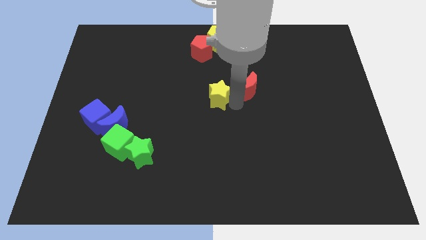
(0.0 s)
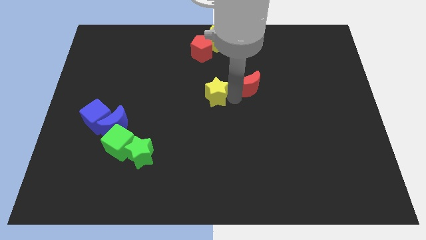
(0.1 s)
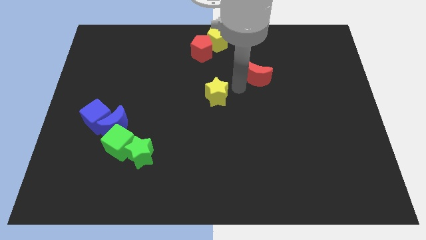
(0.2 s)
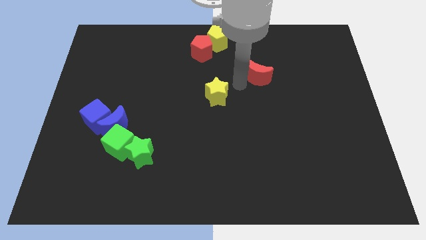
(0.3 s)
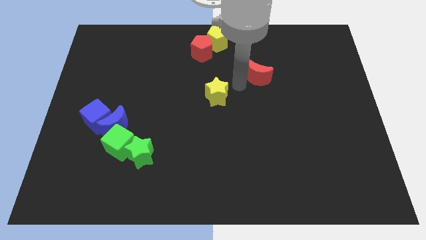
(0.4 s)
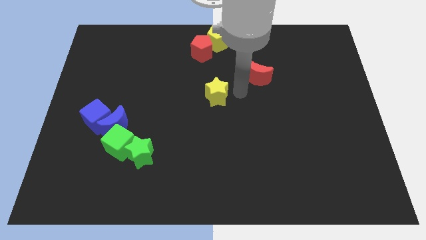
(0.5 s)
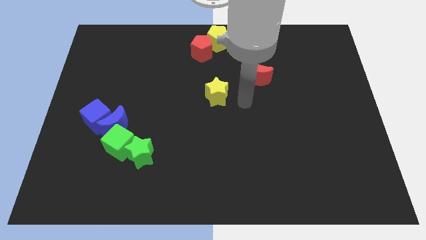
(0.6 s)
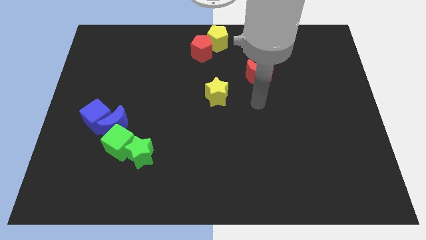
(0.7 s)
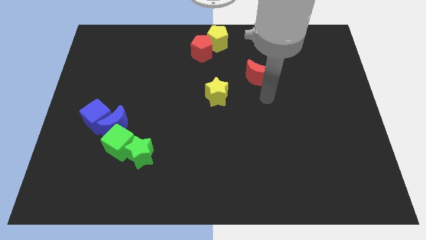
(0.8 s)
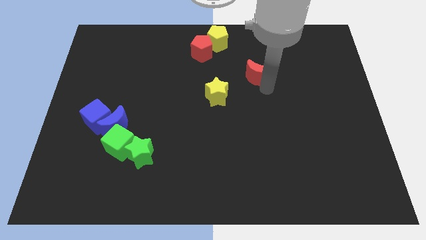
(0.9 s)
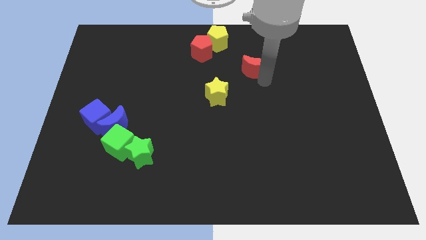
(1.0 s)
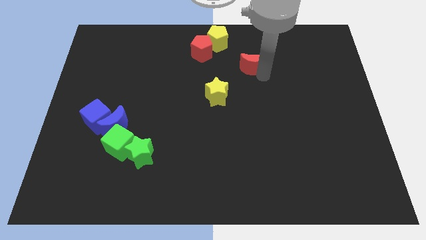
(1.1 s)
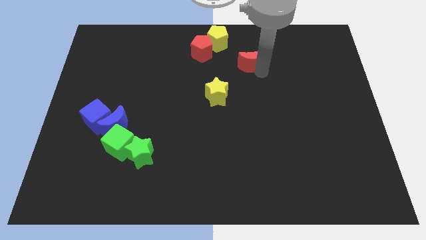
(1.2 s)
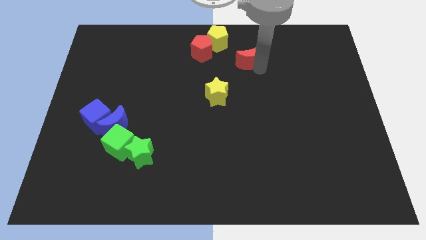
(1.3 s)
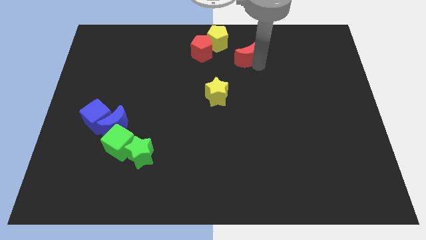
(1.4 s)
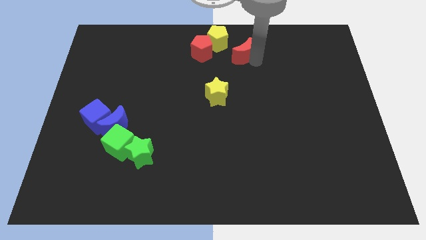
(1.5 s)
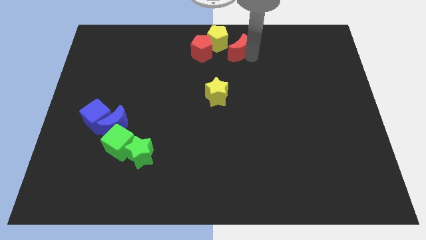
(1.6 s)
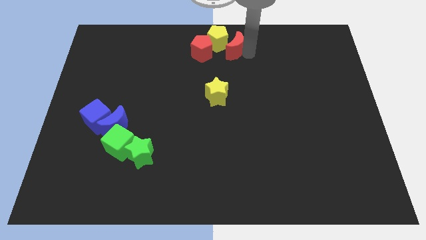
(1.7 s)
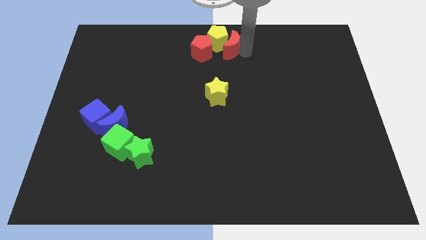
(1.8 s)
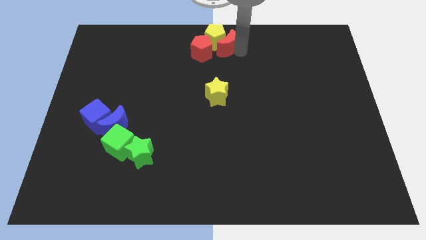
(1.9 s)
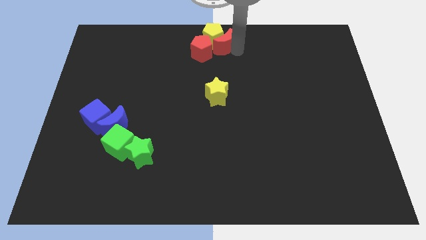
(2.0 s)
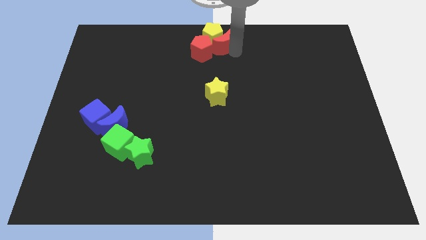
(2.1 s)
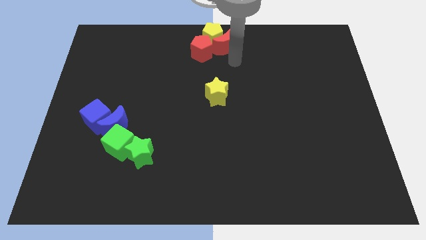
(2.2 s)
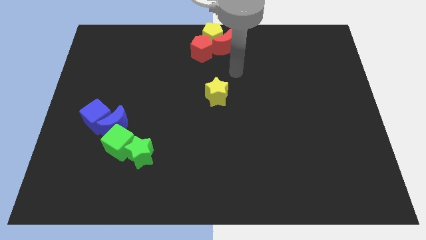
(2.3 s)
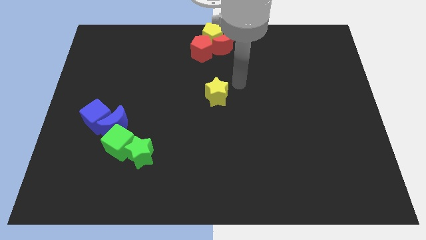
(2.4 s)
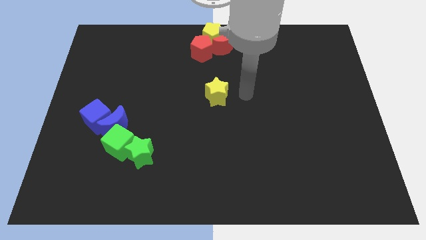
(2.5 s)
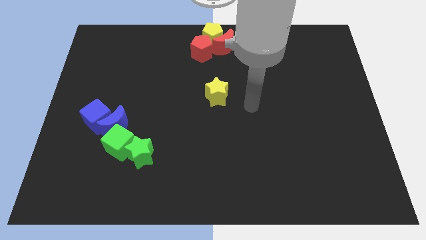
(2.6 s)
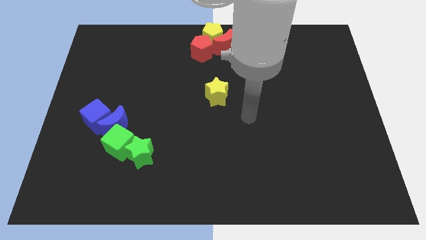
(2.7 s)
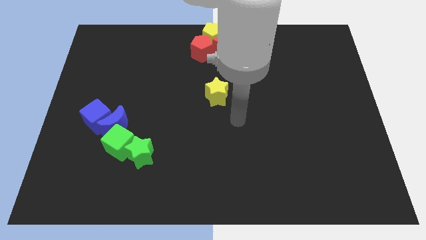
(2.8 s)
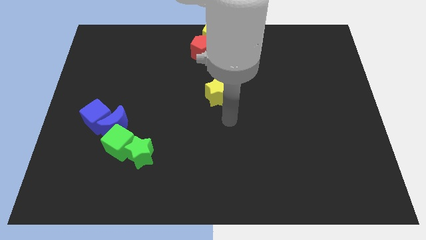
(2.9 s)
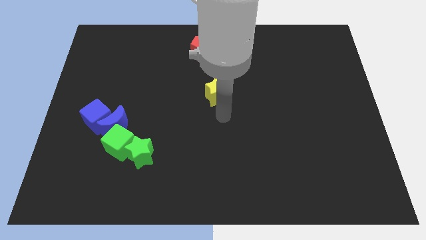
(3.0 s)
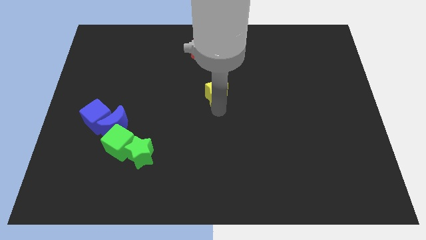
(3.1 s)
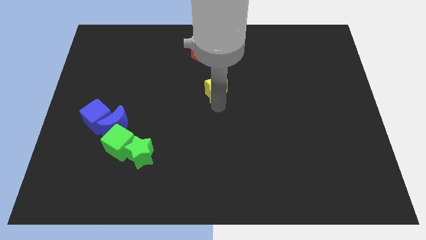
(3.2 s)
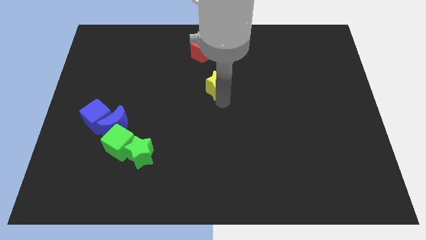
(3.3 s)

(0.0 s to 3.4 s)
push the red moon right to the red pentagon

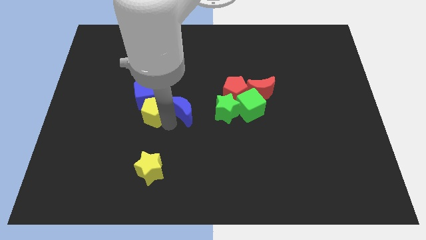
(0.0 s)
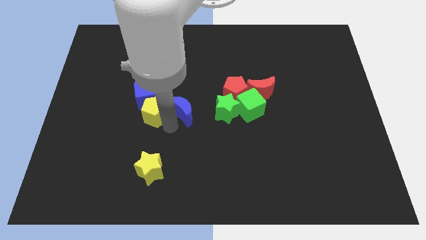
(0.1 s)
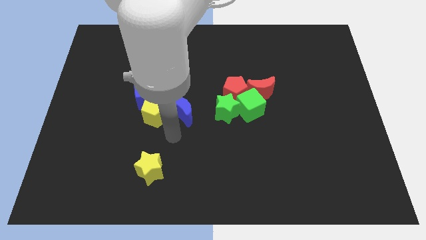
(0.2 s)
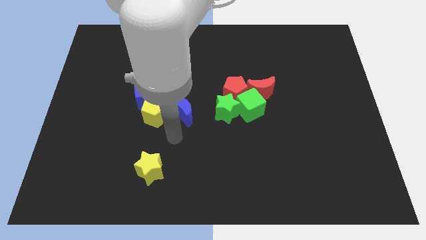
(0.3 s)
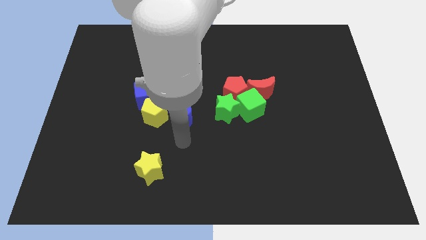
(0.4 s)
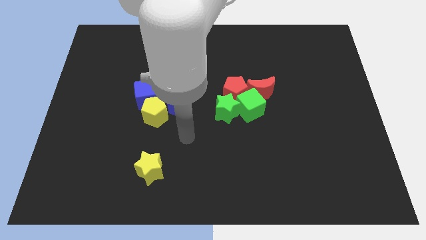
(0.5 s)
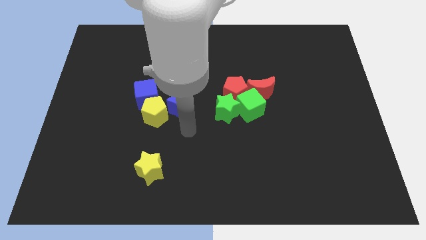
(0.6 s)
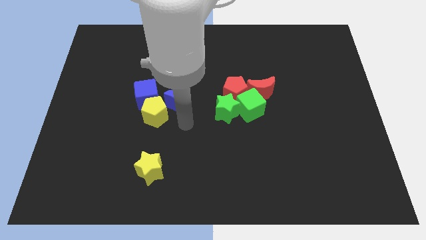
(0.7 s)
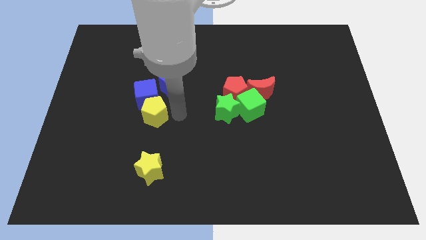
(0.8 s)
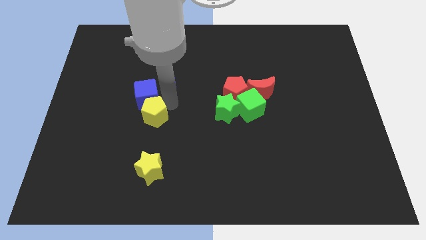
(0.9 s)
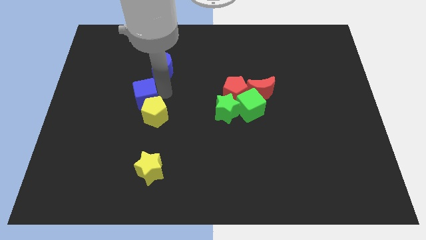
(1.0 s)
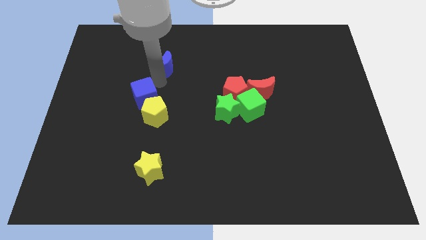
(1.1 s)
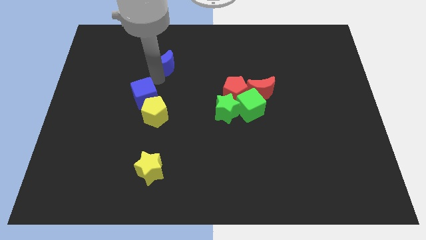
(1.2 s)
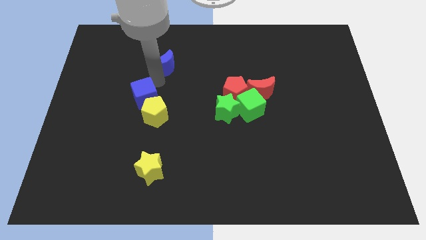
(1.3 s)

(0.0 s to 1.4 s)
push blue crescent slightly towards upwards

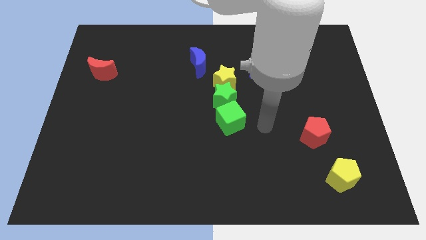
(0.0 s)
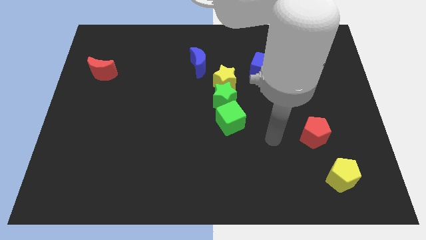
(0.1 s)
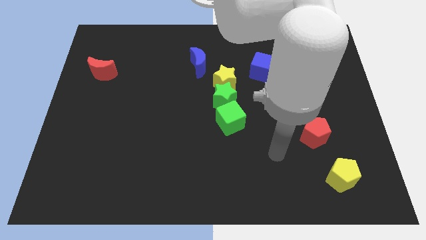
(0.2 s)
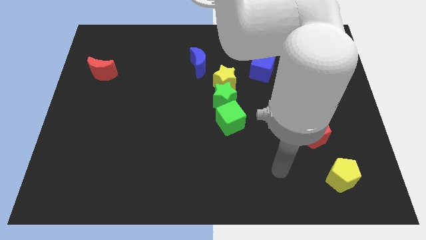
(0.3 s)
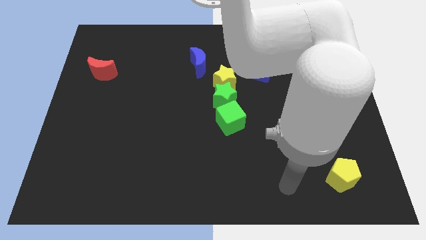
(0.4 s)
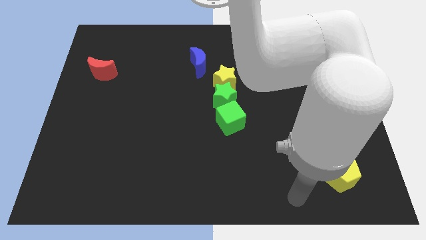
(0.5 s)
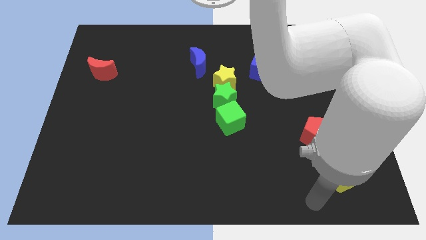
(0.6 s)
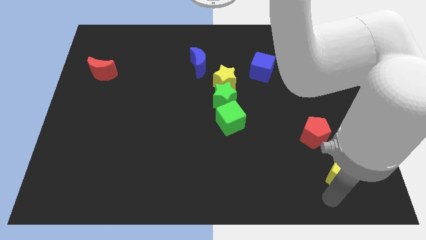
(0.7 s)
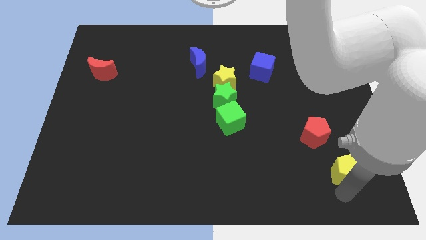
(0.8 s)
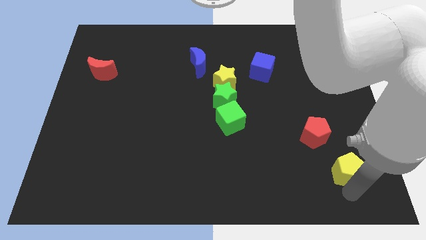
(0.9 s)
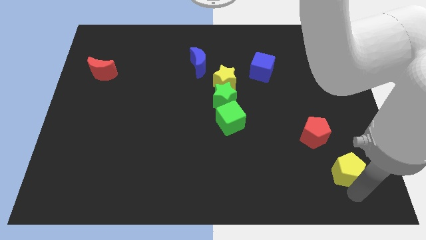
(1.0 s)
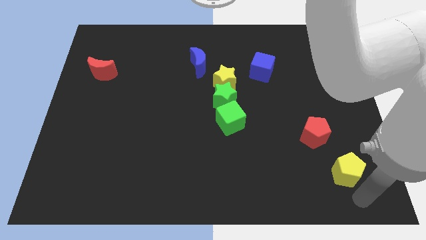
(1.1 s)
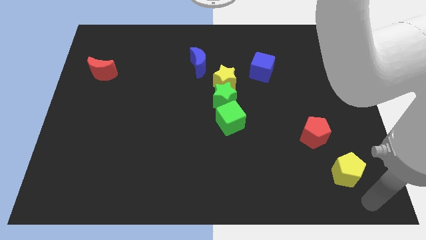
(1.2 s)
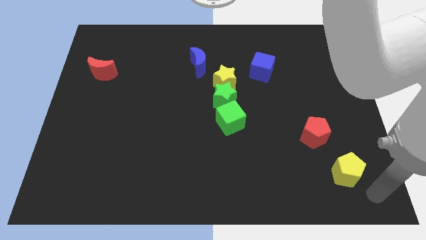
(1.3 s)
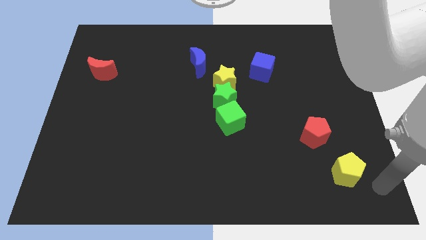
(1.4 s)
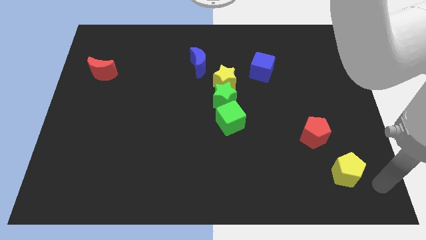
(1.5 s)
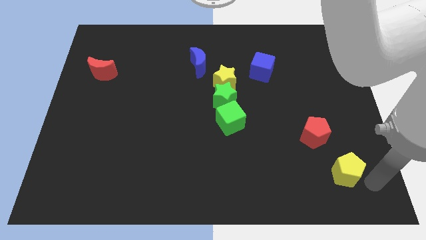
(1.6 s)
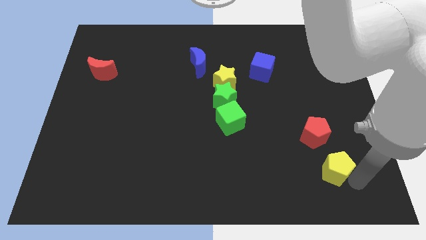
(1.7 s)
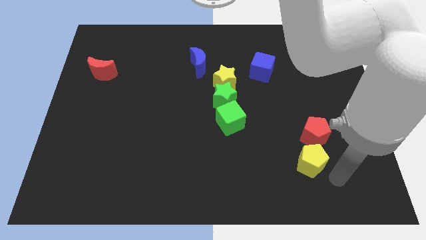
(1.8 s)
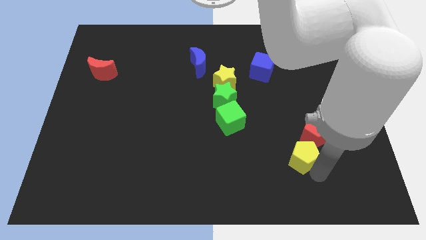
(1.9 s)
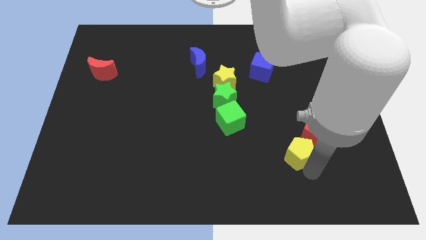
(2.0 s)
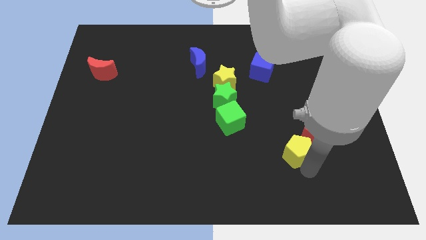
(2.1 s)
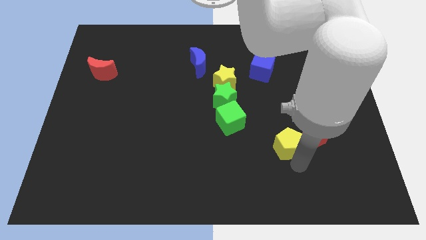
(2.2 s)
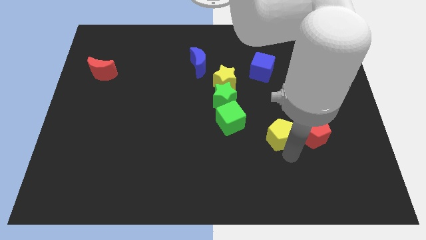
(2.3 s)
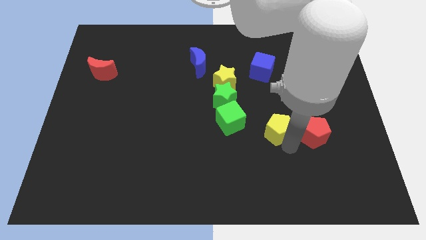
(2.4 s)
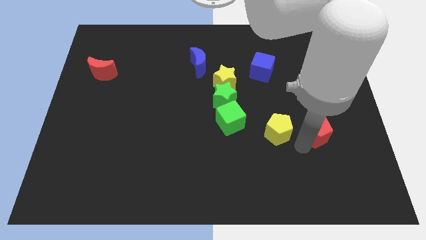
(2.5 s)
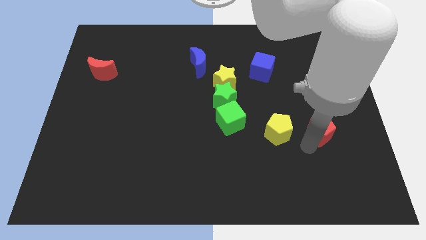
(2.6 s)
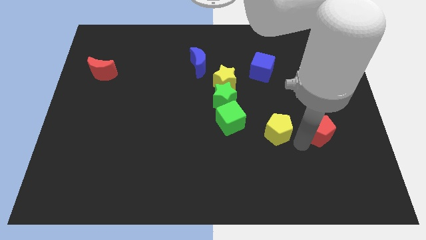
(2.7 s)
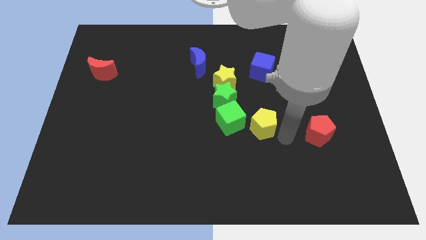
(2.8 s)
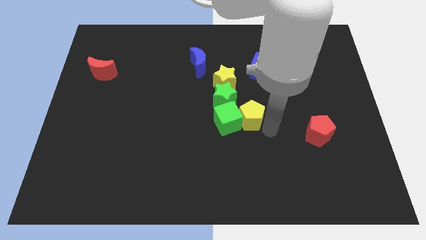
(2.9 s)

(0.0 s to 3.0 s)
move the yellow pentagon right to the green cube

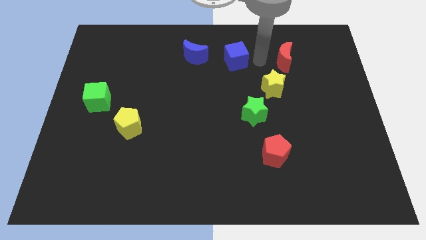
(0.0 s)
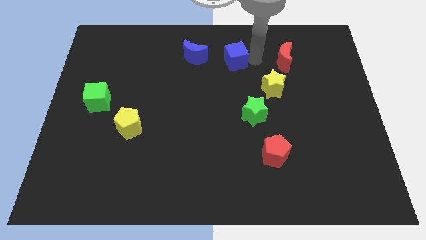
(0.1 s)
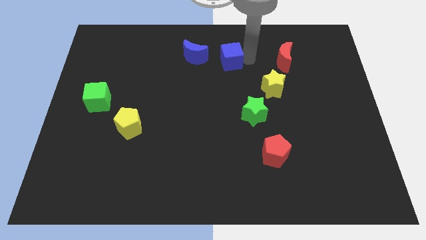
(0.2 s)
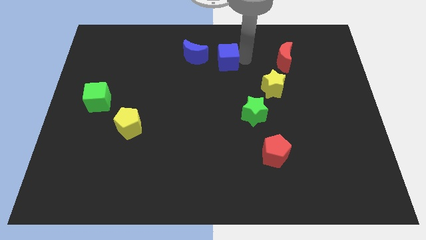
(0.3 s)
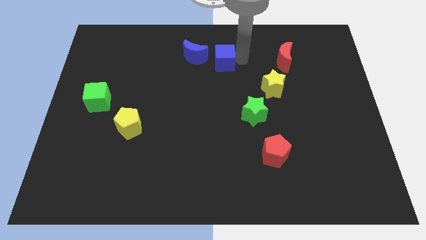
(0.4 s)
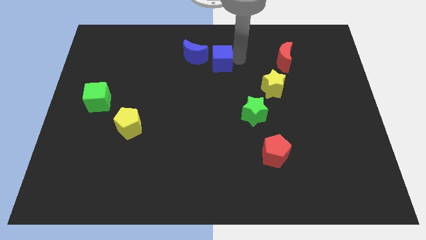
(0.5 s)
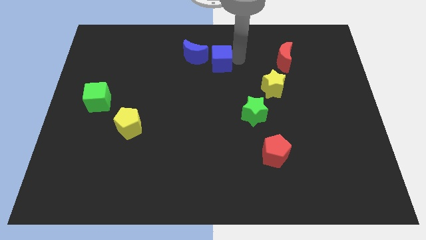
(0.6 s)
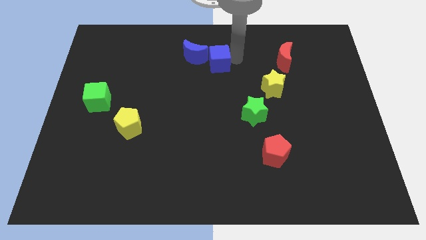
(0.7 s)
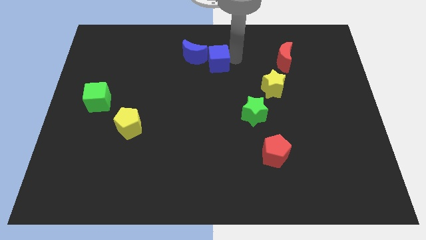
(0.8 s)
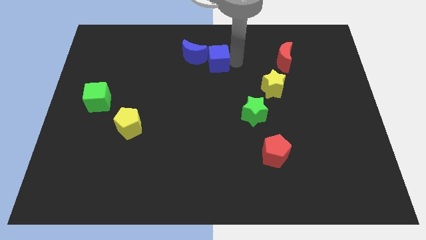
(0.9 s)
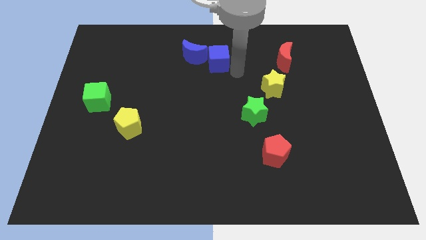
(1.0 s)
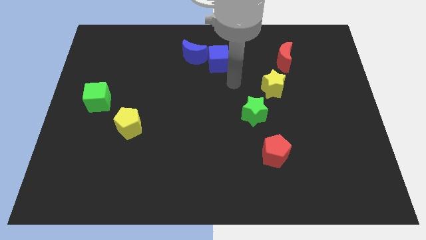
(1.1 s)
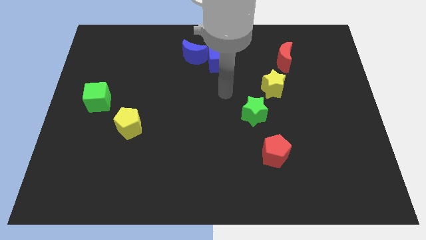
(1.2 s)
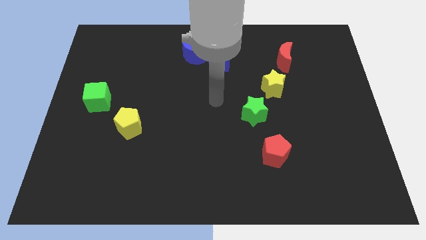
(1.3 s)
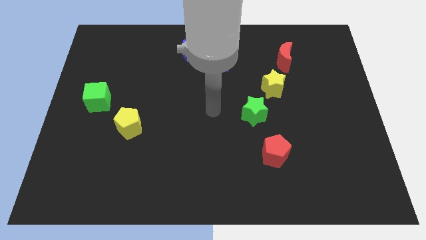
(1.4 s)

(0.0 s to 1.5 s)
move the blue cube close to the blue crescent
